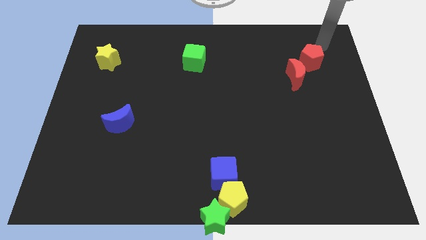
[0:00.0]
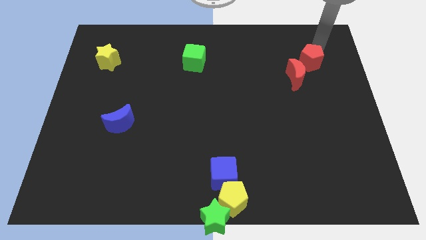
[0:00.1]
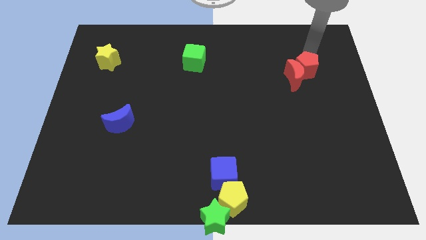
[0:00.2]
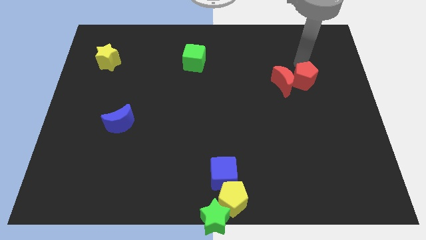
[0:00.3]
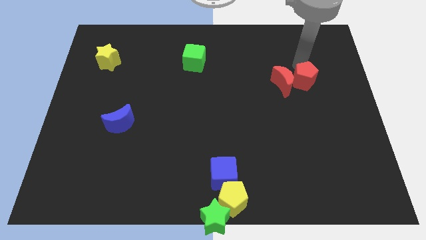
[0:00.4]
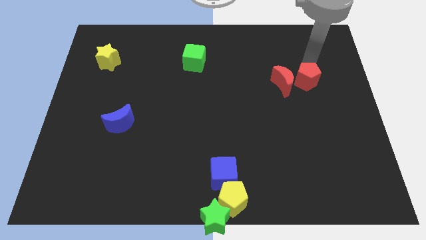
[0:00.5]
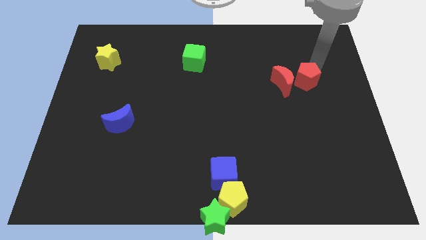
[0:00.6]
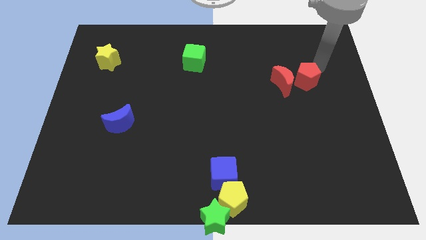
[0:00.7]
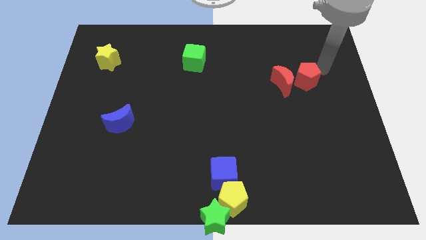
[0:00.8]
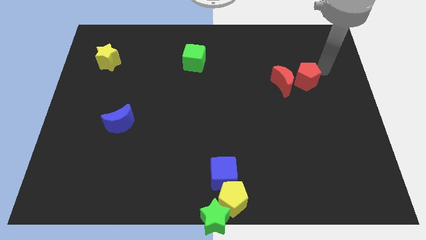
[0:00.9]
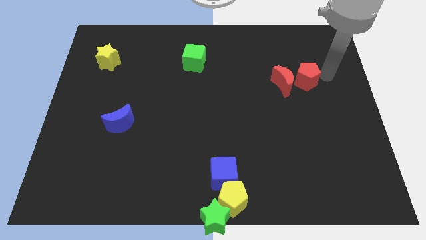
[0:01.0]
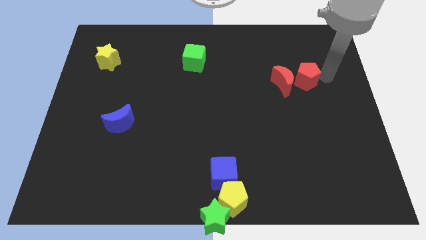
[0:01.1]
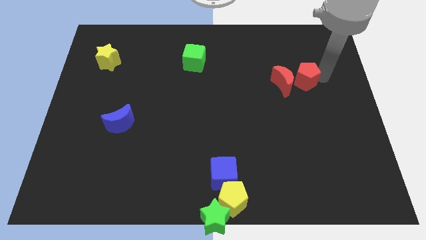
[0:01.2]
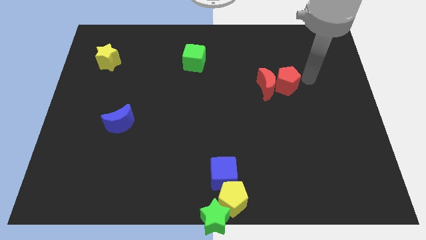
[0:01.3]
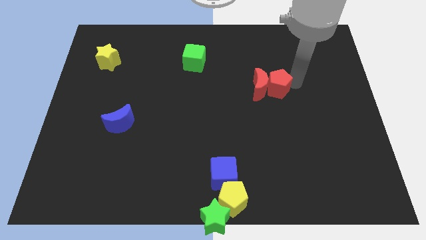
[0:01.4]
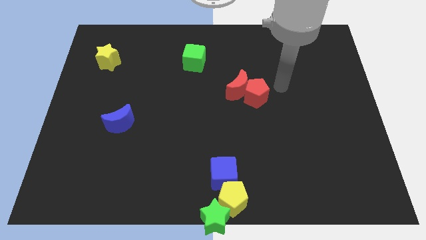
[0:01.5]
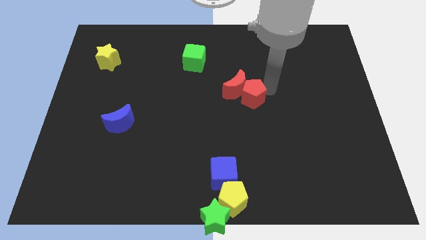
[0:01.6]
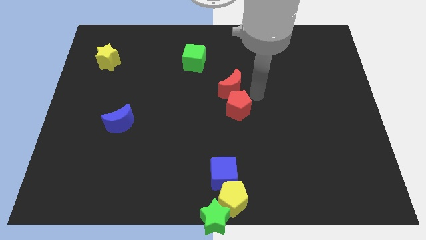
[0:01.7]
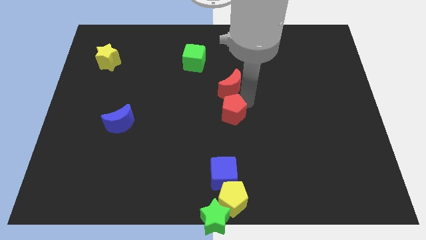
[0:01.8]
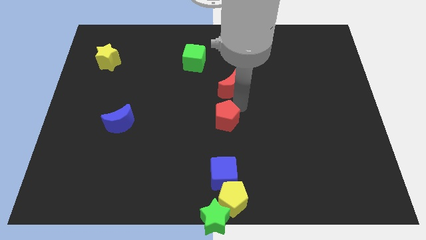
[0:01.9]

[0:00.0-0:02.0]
place the red moon and red pentagon towards the center of the board

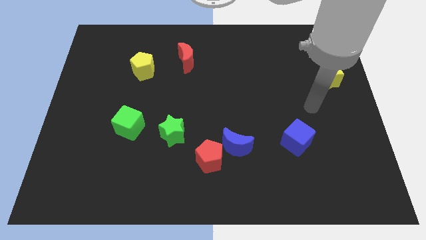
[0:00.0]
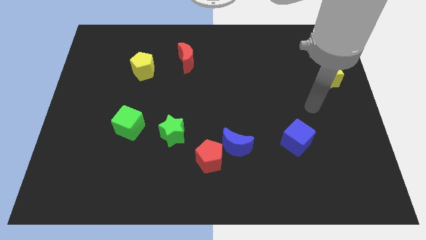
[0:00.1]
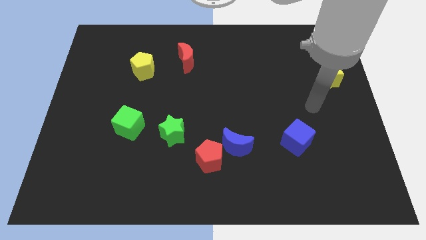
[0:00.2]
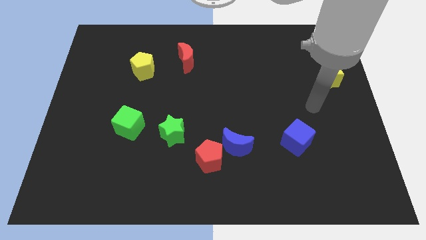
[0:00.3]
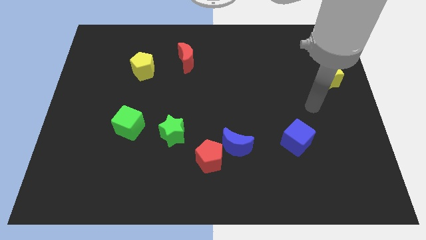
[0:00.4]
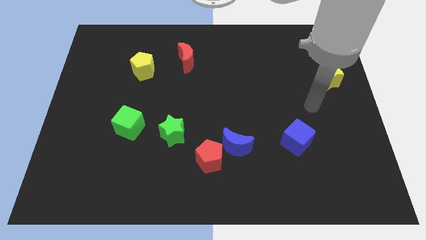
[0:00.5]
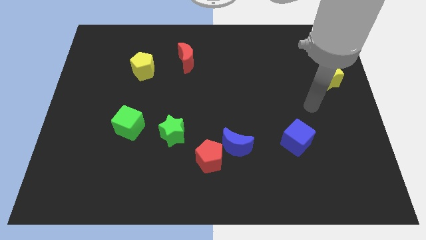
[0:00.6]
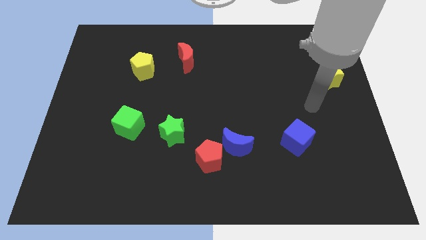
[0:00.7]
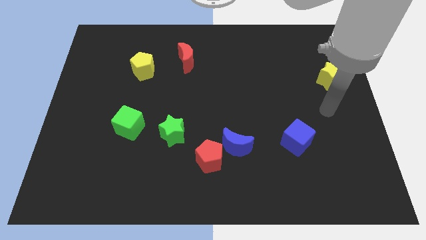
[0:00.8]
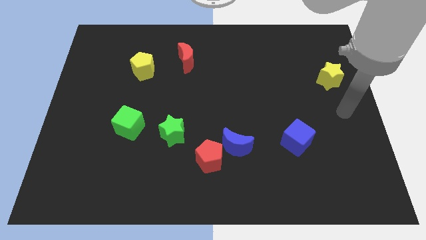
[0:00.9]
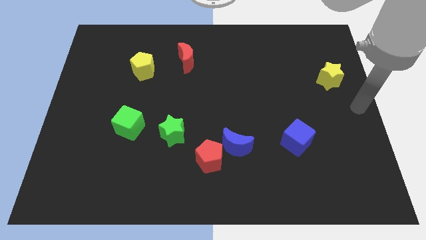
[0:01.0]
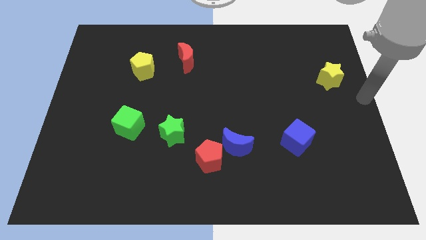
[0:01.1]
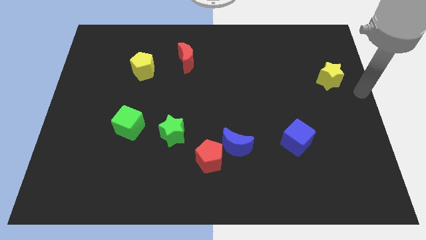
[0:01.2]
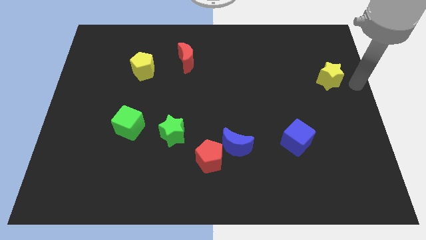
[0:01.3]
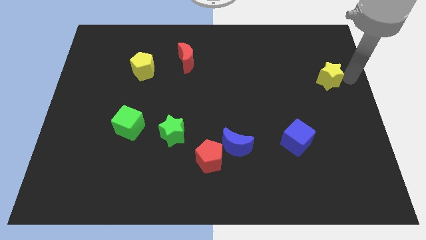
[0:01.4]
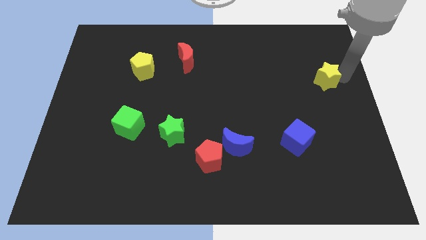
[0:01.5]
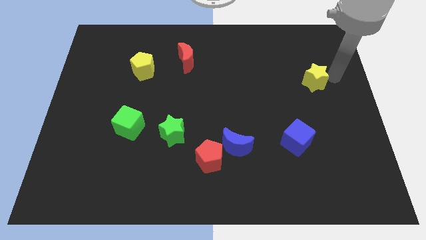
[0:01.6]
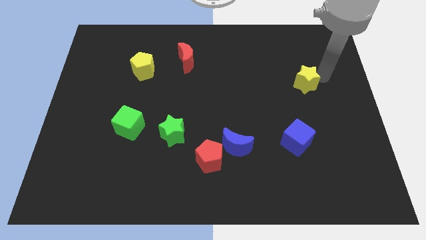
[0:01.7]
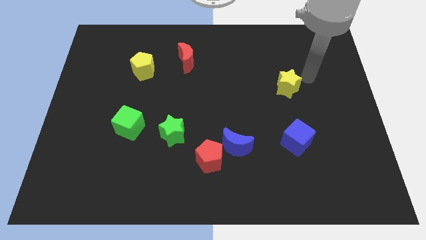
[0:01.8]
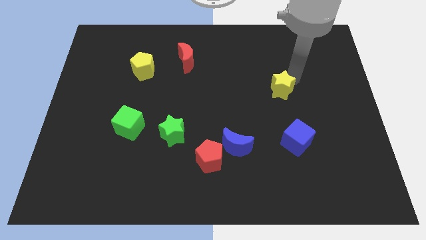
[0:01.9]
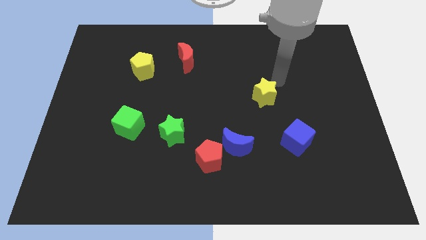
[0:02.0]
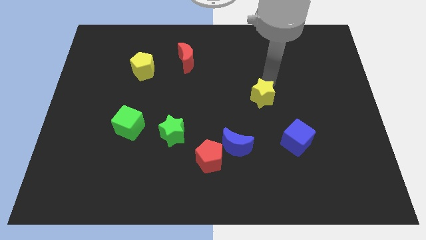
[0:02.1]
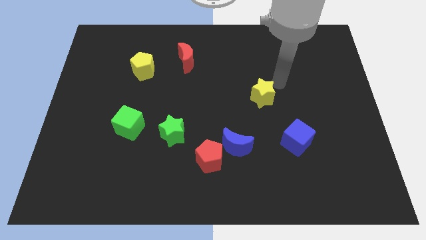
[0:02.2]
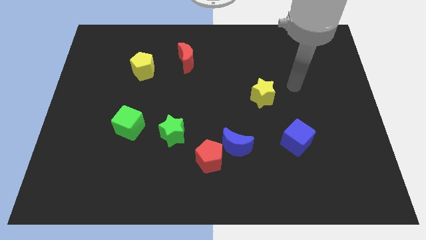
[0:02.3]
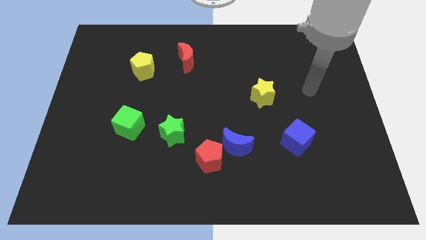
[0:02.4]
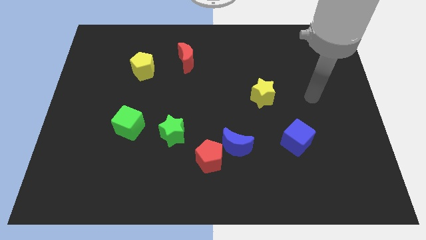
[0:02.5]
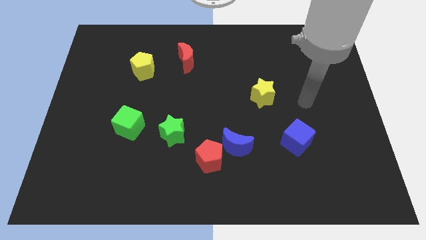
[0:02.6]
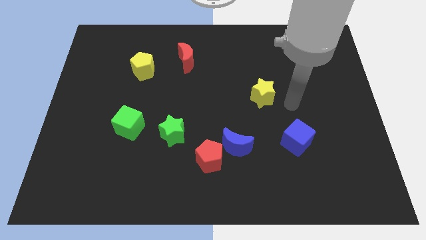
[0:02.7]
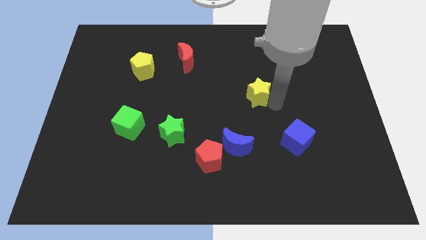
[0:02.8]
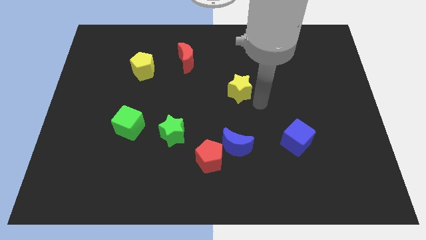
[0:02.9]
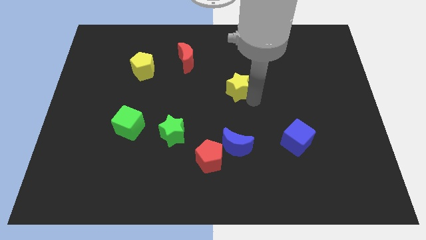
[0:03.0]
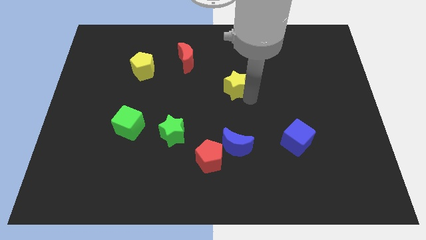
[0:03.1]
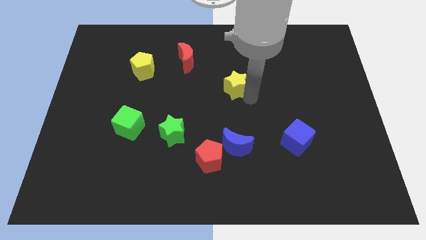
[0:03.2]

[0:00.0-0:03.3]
move the yellow star to the top side of the blue moon

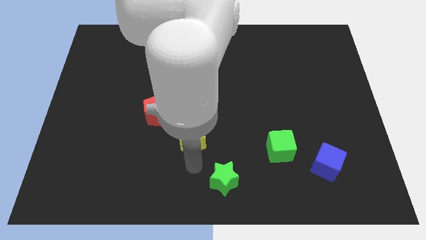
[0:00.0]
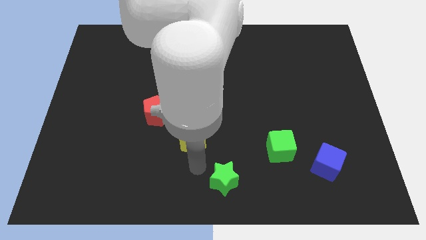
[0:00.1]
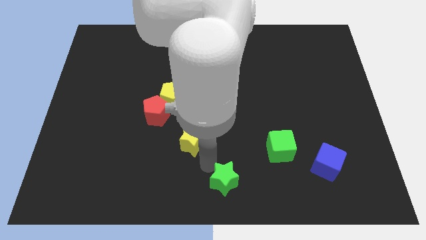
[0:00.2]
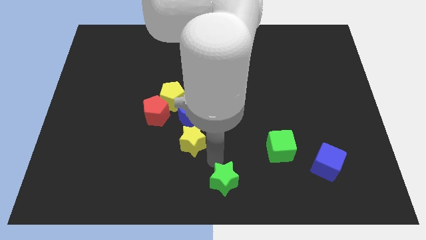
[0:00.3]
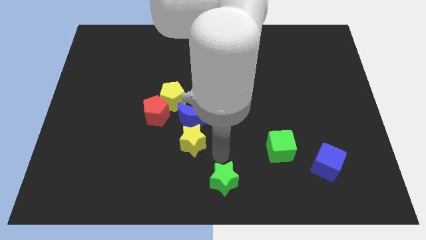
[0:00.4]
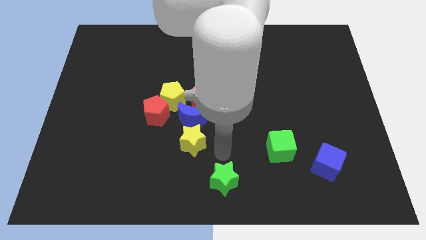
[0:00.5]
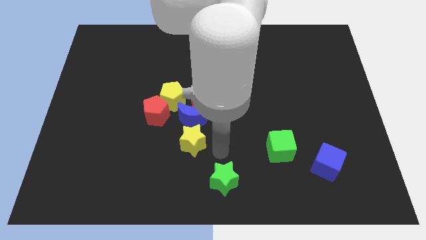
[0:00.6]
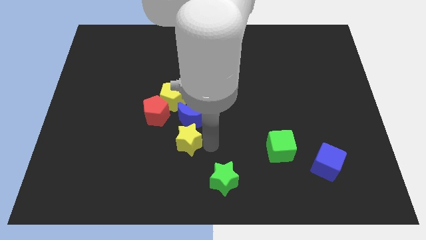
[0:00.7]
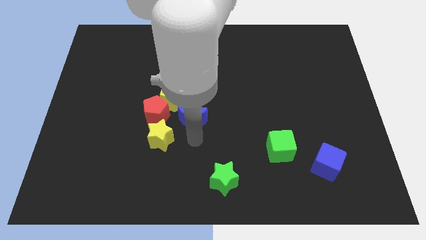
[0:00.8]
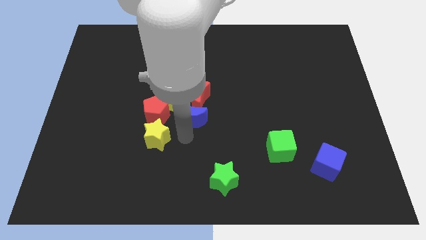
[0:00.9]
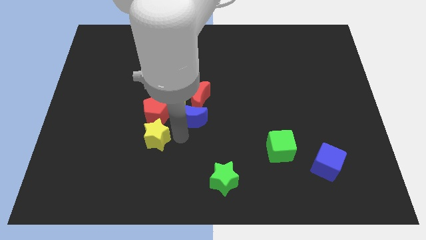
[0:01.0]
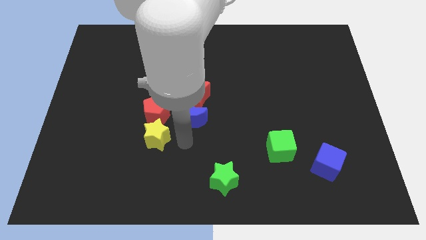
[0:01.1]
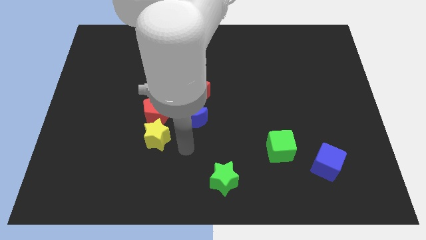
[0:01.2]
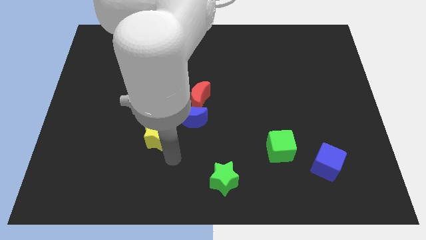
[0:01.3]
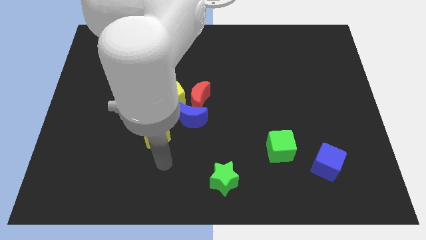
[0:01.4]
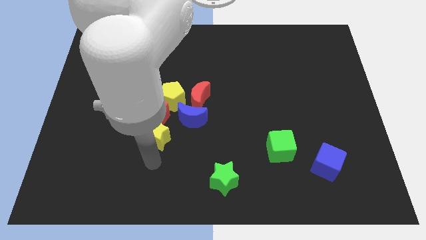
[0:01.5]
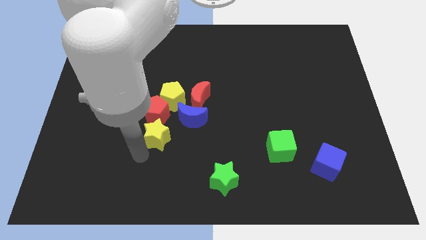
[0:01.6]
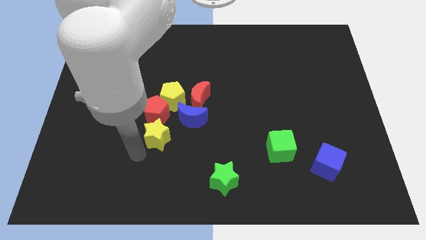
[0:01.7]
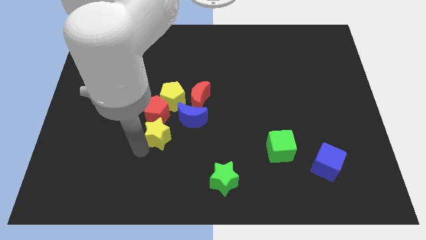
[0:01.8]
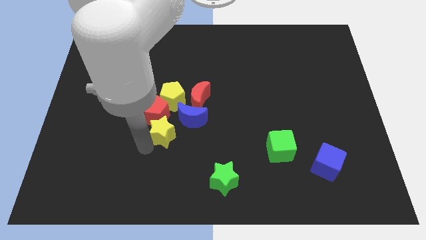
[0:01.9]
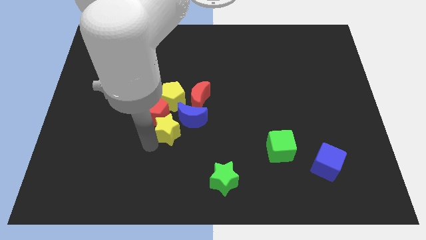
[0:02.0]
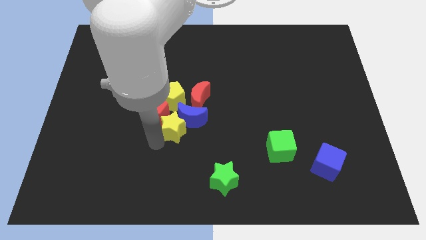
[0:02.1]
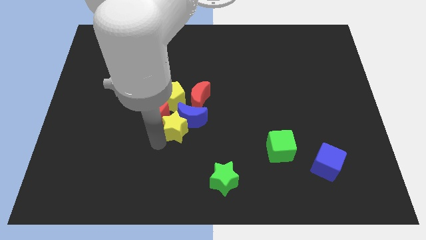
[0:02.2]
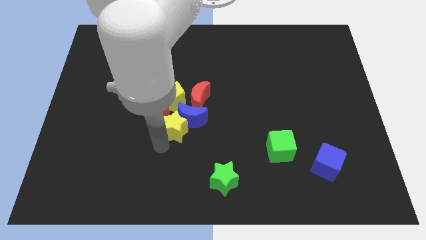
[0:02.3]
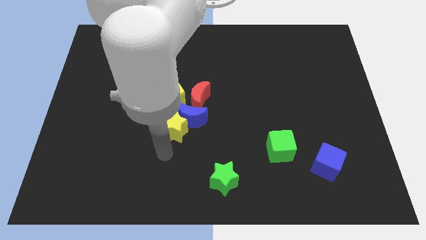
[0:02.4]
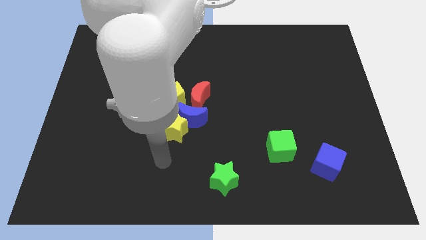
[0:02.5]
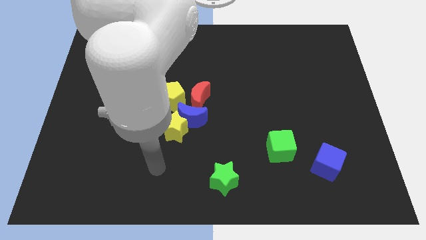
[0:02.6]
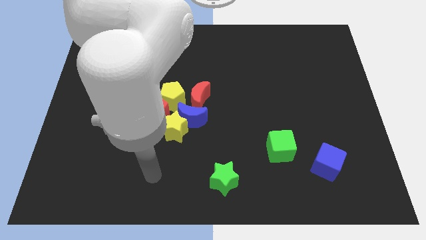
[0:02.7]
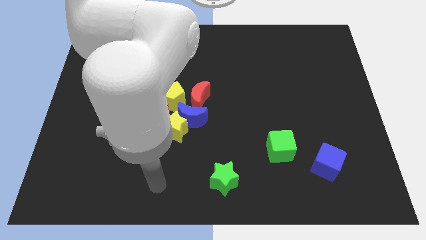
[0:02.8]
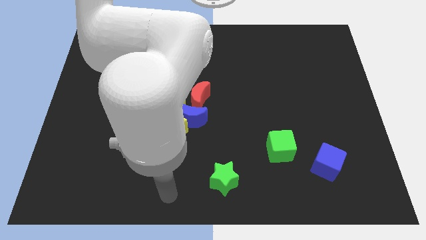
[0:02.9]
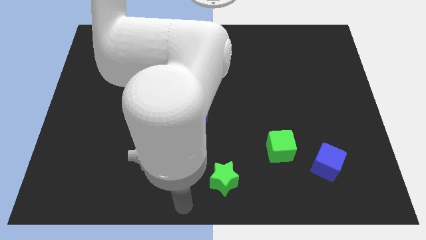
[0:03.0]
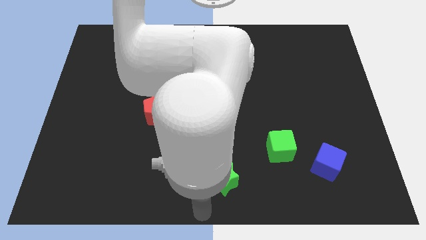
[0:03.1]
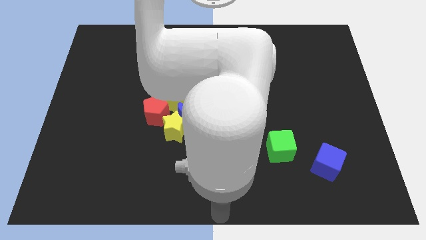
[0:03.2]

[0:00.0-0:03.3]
move yellow star at the bottom of blue moon

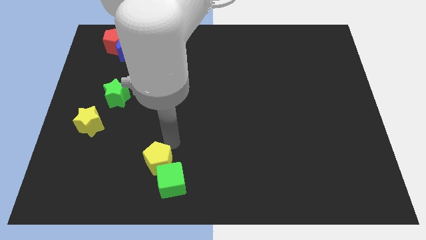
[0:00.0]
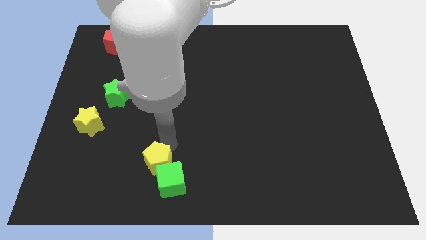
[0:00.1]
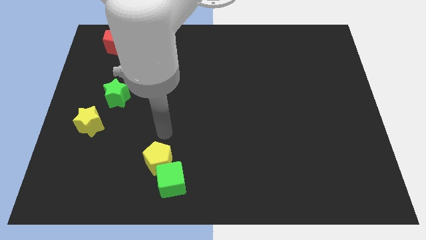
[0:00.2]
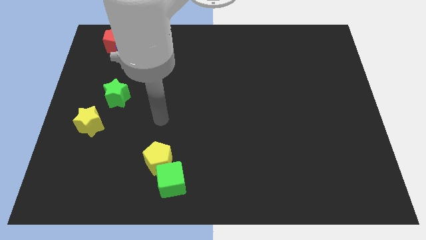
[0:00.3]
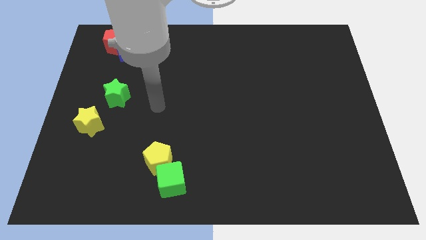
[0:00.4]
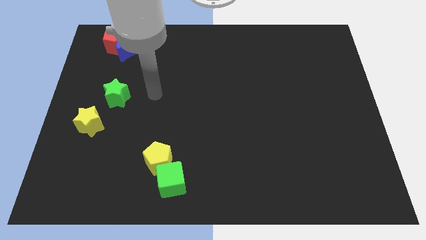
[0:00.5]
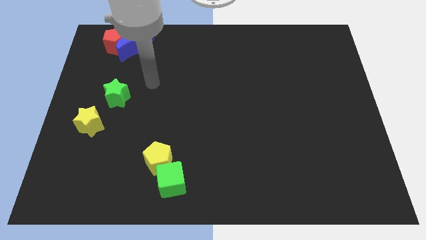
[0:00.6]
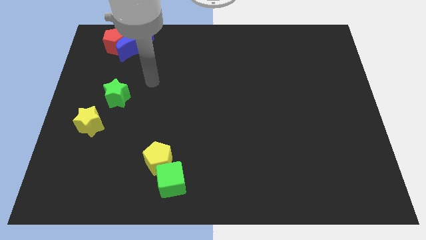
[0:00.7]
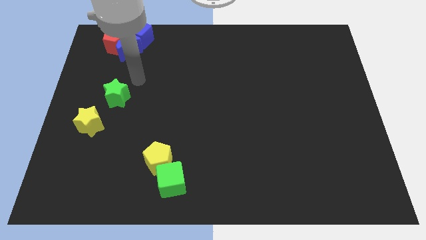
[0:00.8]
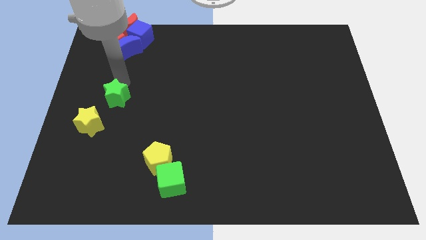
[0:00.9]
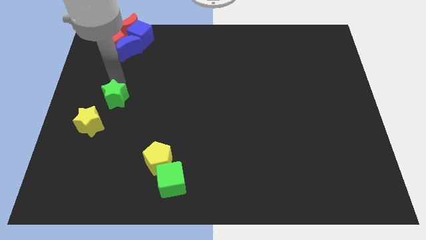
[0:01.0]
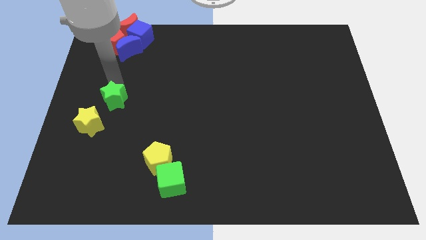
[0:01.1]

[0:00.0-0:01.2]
go away from the yellow pentagon
